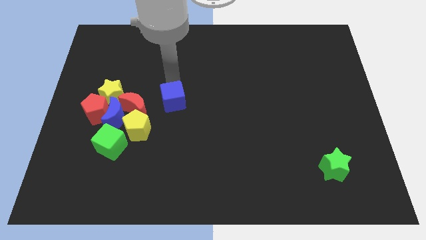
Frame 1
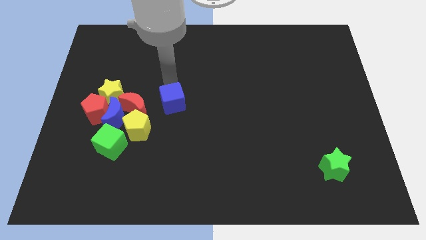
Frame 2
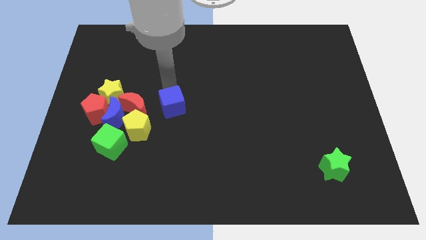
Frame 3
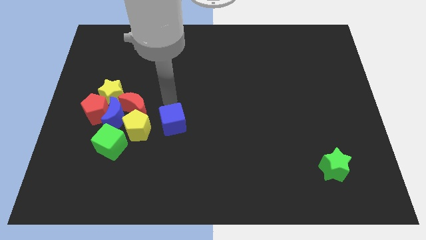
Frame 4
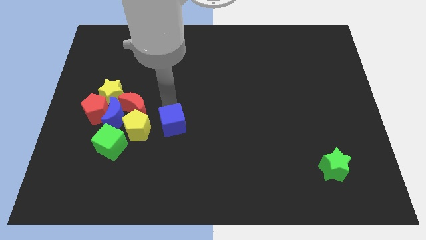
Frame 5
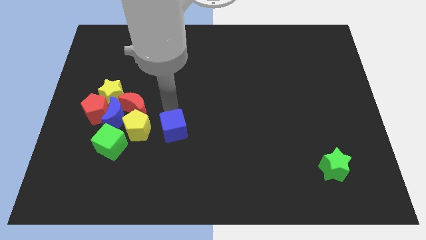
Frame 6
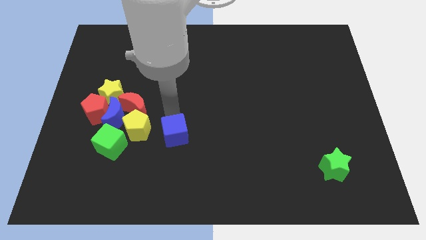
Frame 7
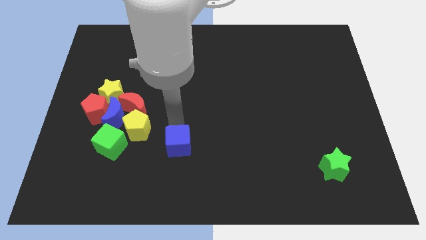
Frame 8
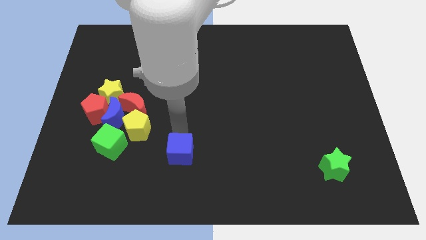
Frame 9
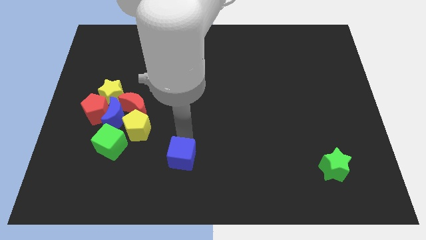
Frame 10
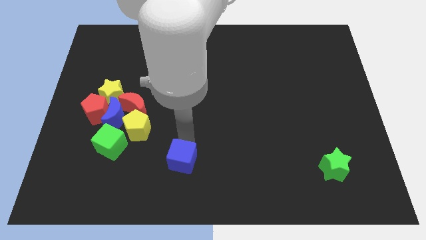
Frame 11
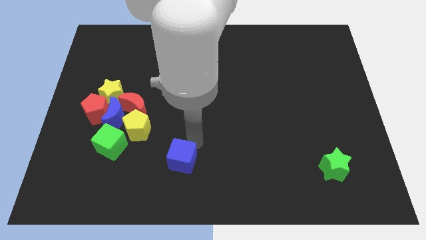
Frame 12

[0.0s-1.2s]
place the blue cube diagonally to the yellow pentagon

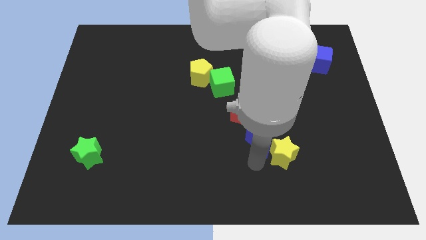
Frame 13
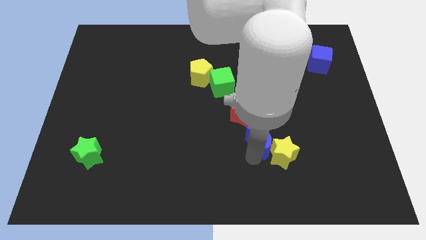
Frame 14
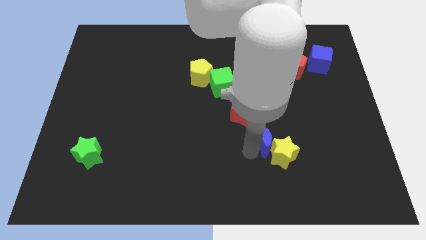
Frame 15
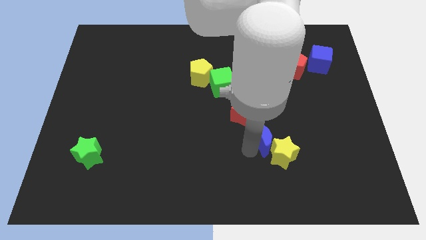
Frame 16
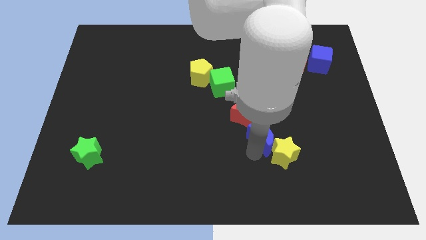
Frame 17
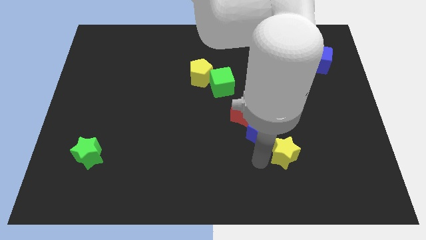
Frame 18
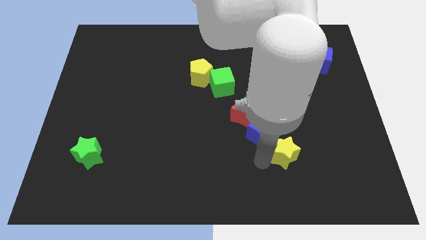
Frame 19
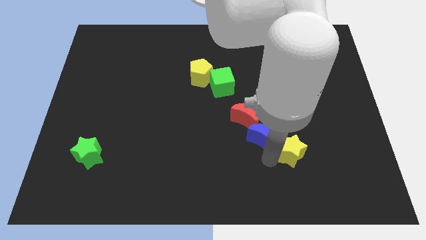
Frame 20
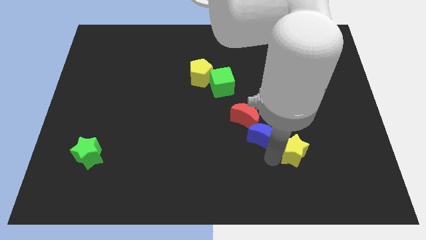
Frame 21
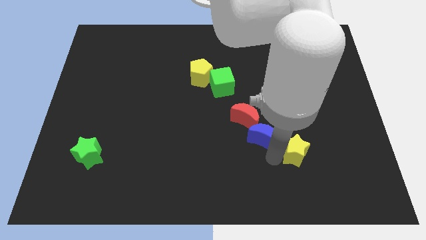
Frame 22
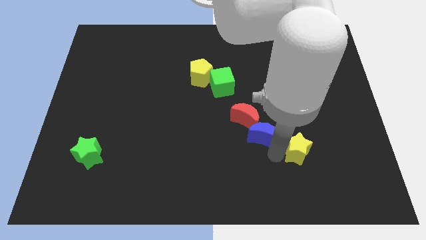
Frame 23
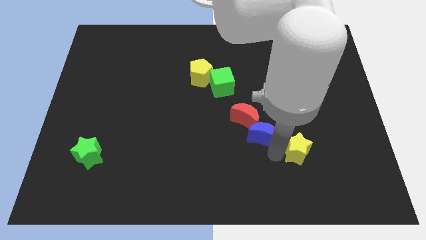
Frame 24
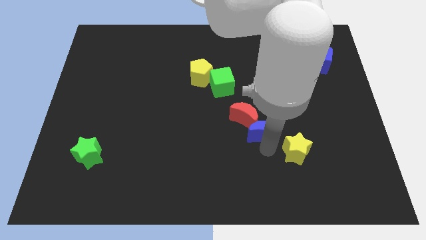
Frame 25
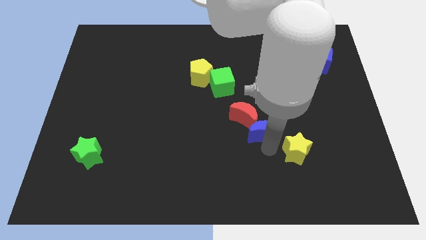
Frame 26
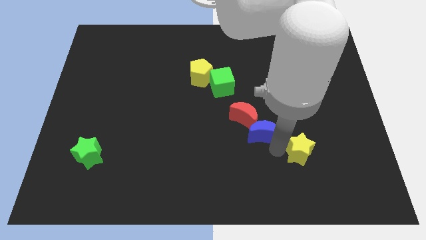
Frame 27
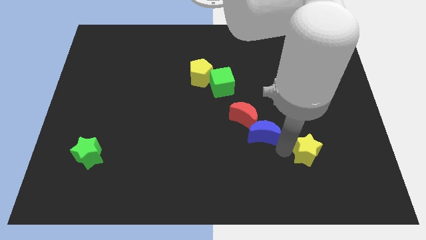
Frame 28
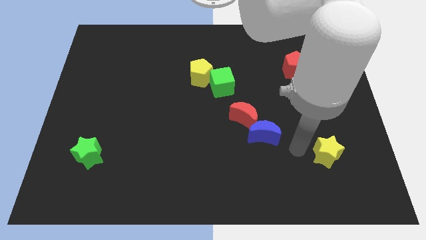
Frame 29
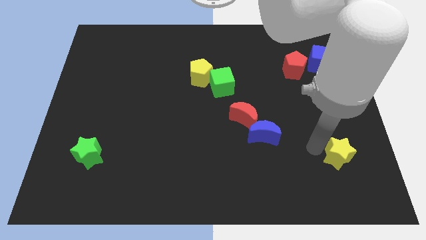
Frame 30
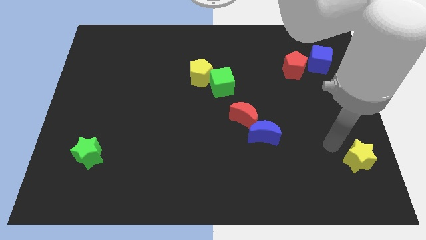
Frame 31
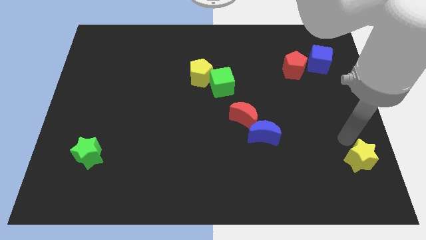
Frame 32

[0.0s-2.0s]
separate the yellow star from the blue cube

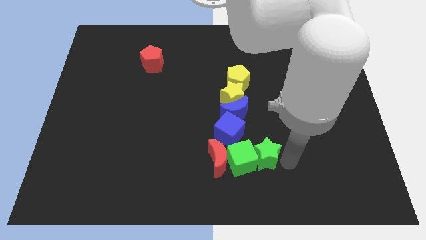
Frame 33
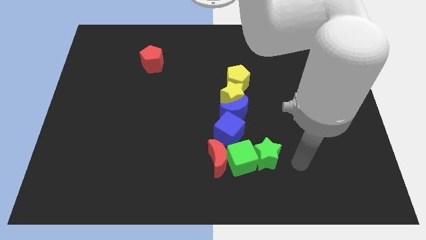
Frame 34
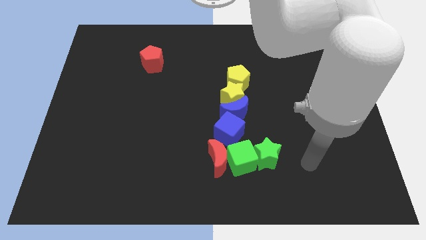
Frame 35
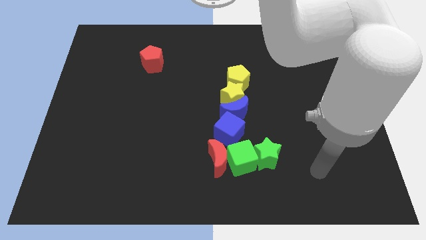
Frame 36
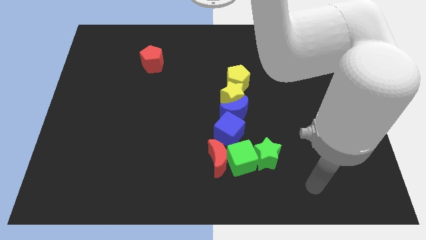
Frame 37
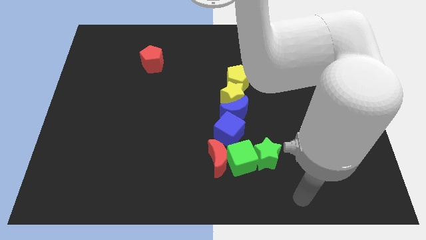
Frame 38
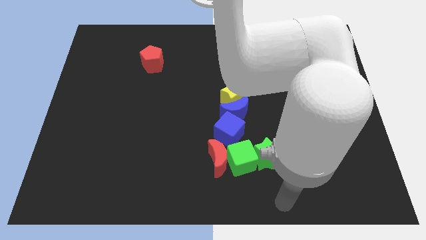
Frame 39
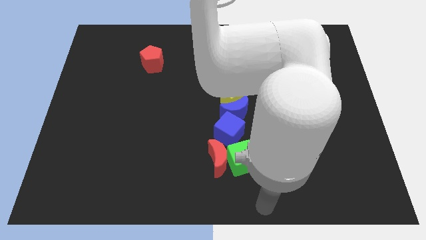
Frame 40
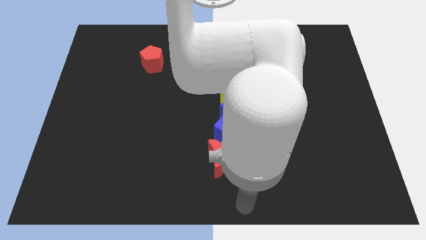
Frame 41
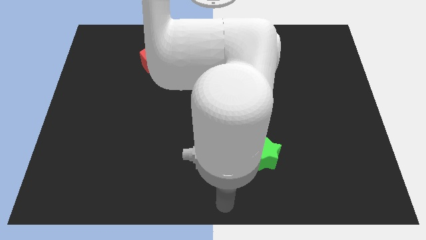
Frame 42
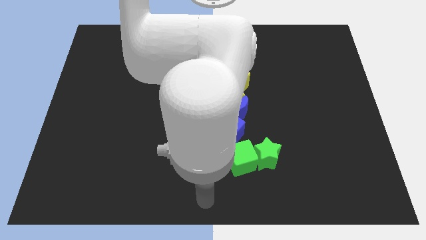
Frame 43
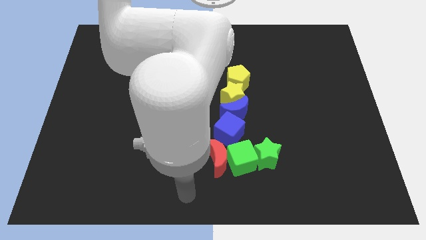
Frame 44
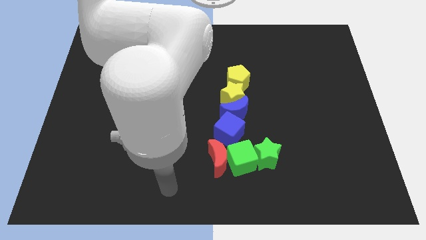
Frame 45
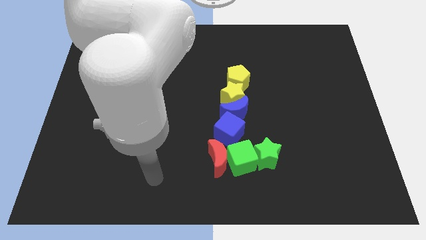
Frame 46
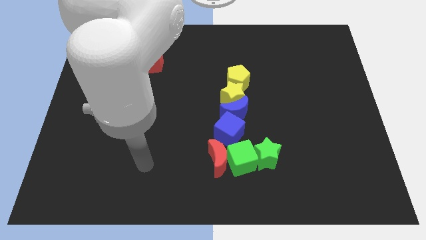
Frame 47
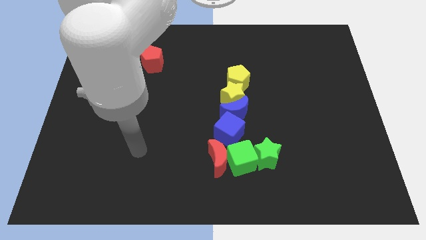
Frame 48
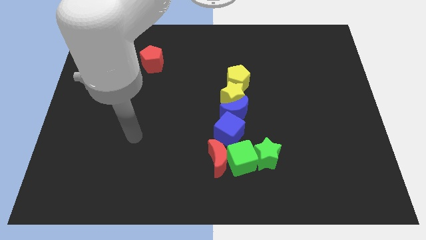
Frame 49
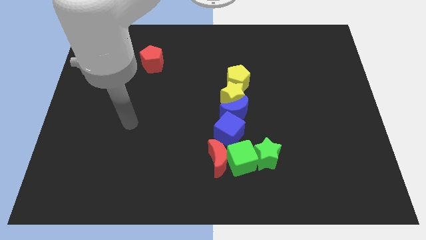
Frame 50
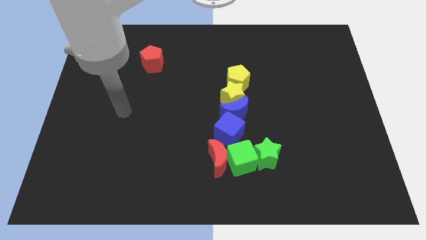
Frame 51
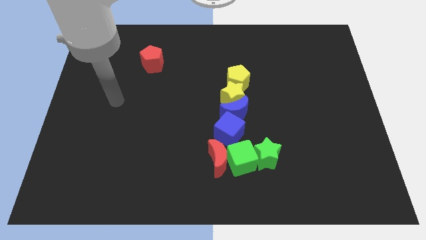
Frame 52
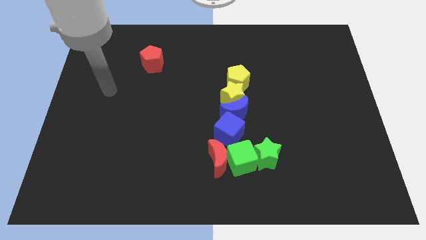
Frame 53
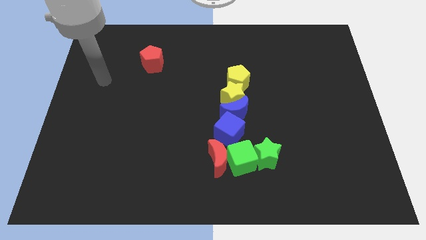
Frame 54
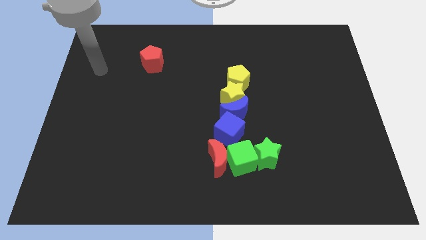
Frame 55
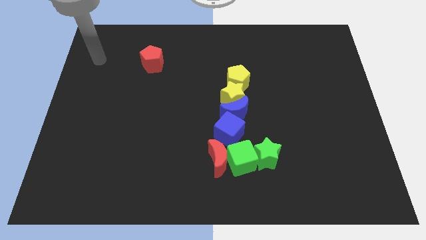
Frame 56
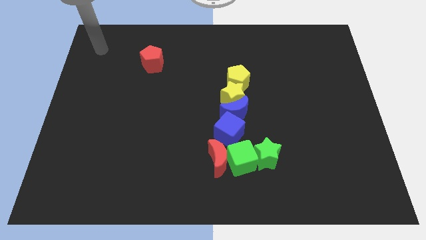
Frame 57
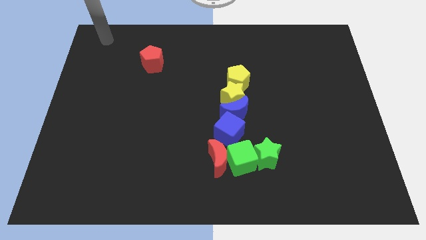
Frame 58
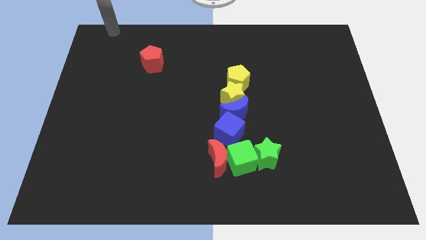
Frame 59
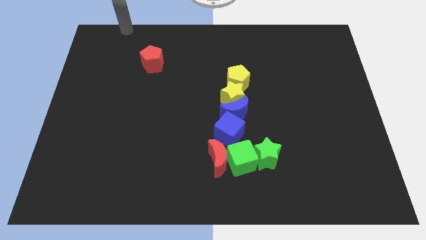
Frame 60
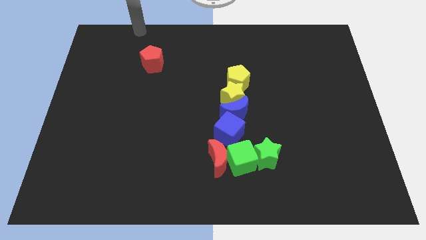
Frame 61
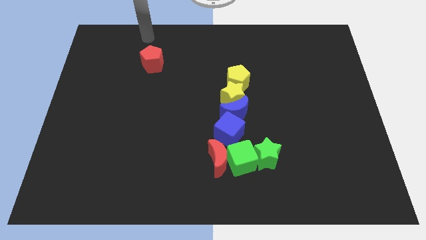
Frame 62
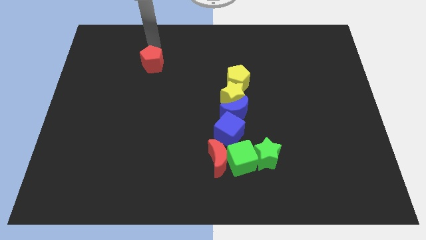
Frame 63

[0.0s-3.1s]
move your arm and point on top of red pentagon

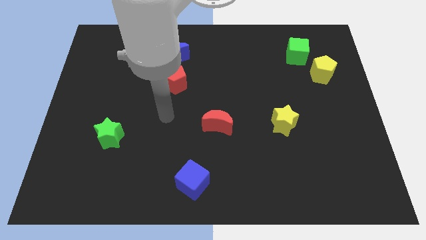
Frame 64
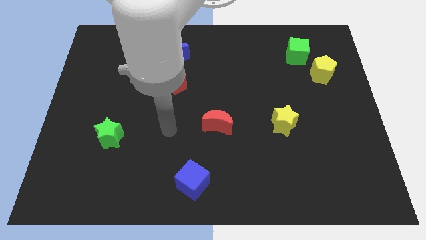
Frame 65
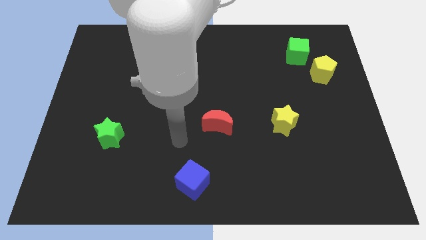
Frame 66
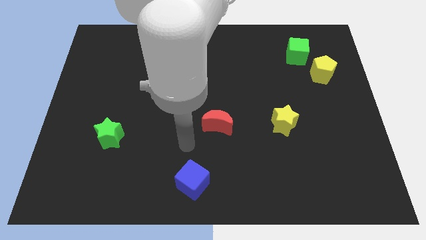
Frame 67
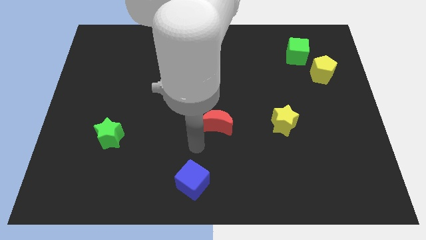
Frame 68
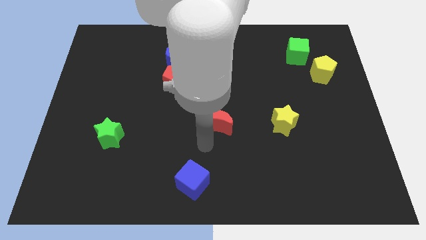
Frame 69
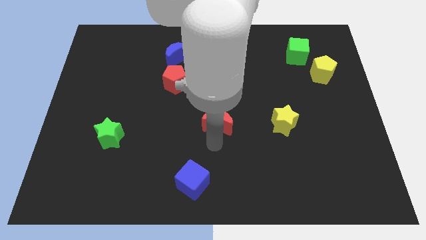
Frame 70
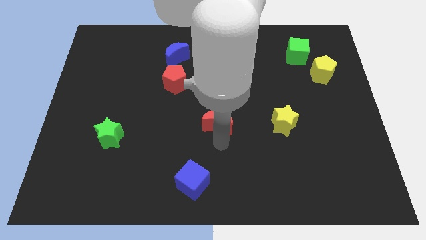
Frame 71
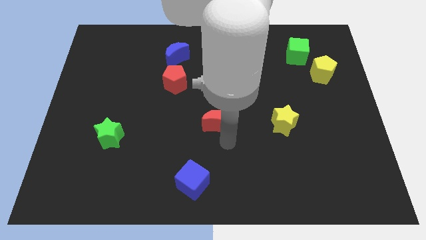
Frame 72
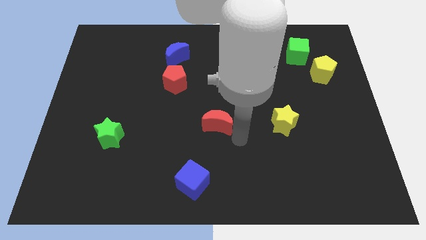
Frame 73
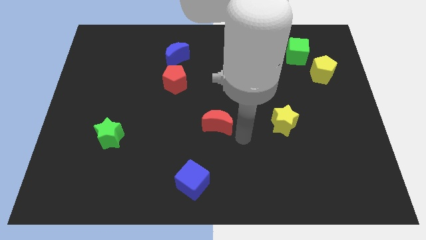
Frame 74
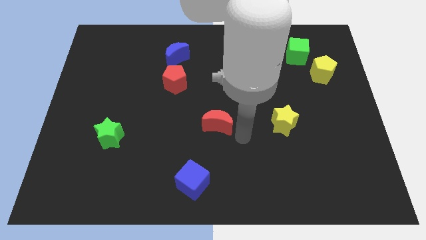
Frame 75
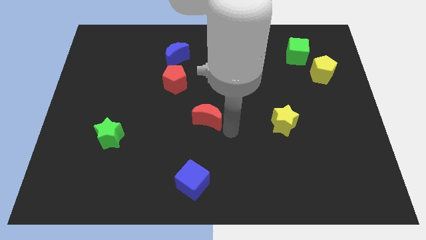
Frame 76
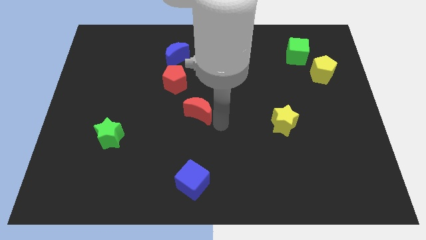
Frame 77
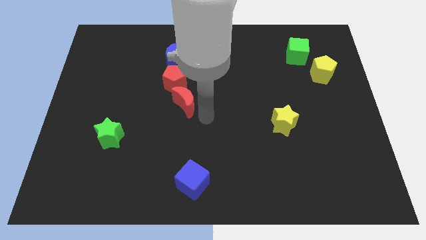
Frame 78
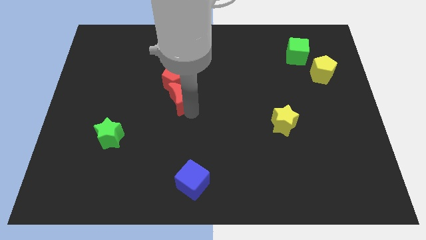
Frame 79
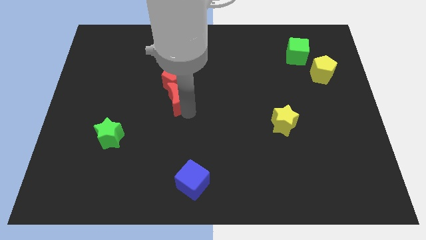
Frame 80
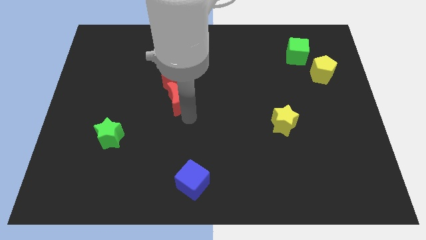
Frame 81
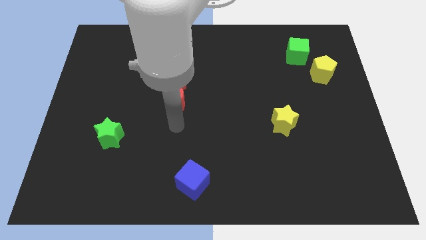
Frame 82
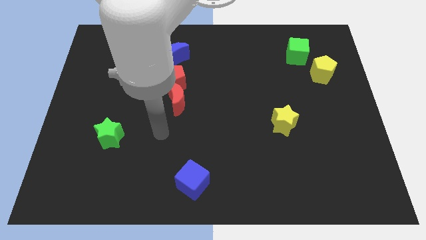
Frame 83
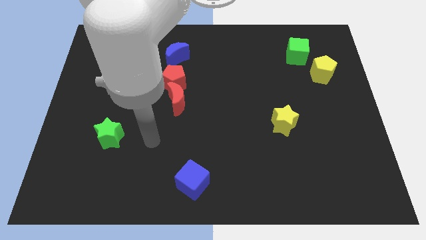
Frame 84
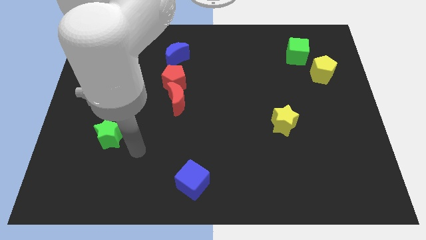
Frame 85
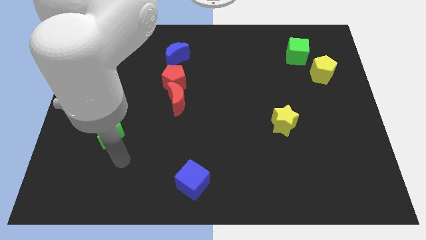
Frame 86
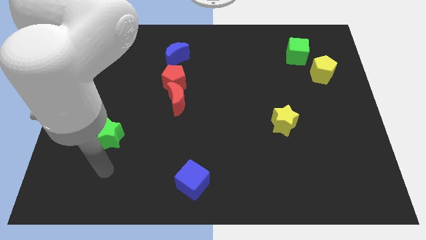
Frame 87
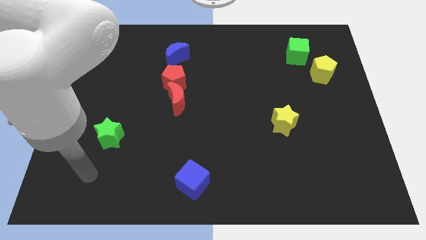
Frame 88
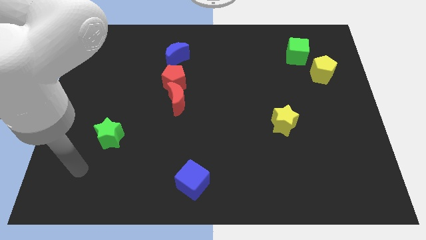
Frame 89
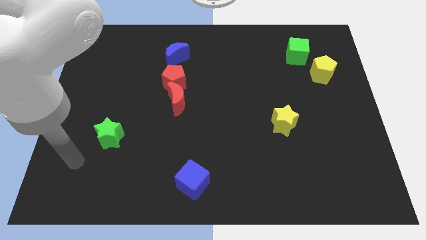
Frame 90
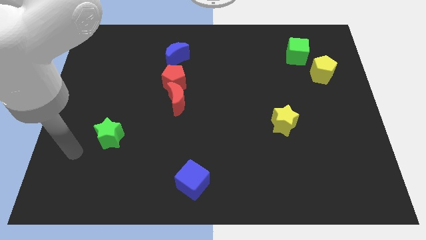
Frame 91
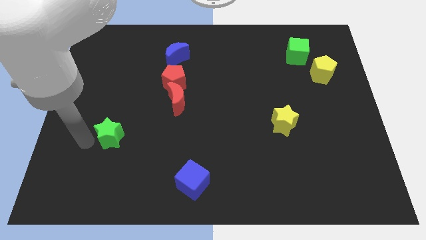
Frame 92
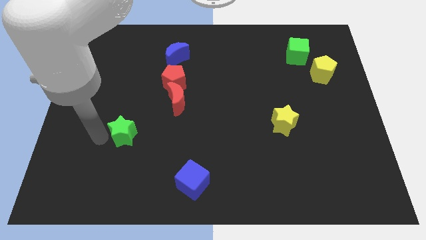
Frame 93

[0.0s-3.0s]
push the red crescent below the red pentagon
